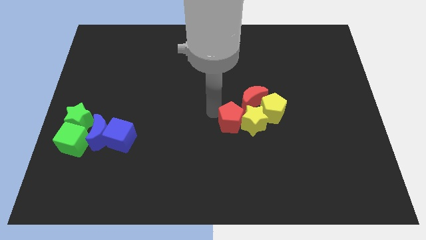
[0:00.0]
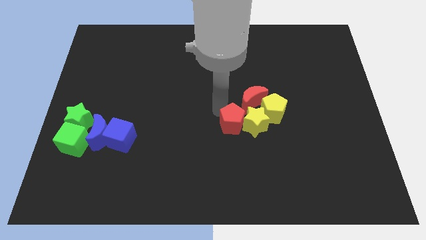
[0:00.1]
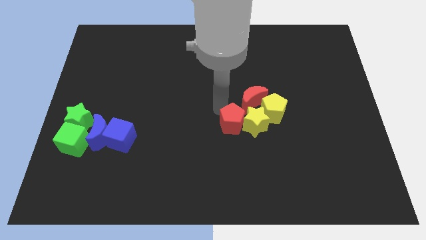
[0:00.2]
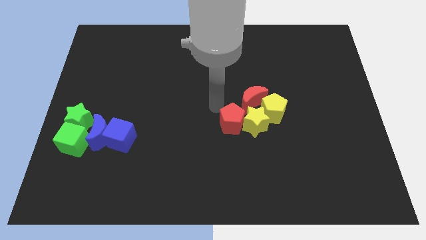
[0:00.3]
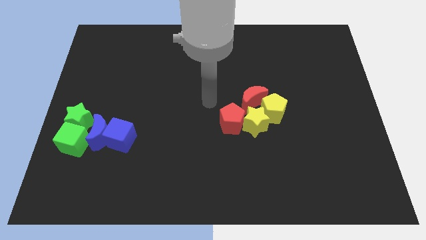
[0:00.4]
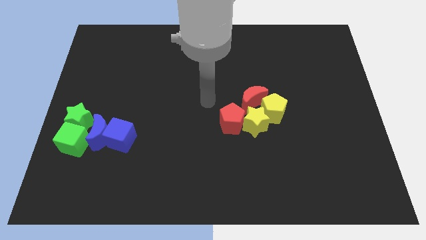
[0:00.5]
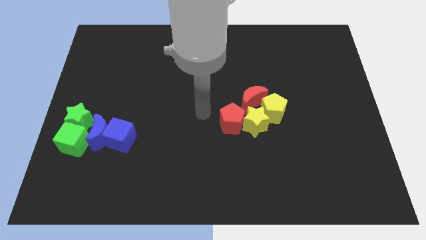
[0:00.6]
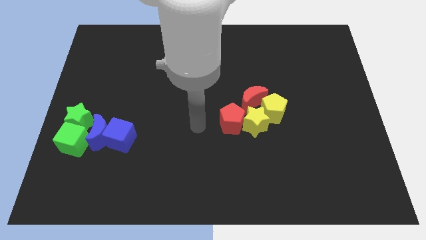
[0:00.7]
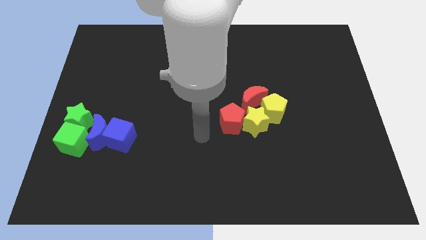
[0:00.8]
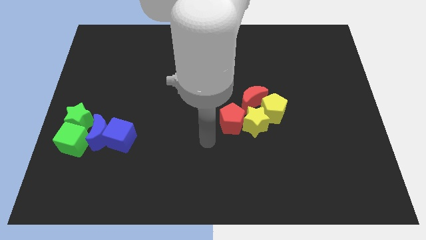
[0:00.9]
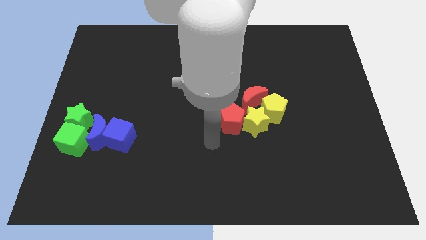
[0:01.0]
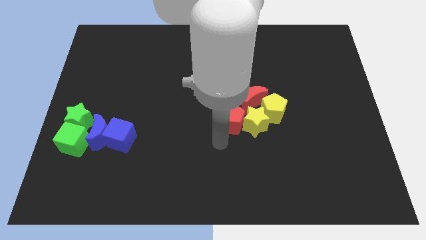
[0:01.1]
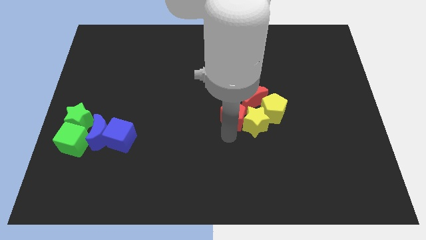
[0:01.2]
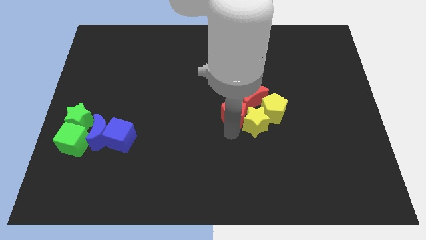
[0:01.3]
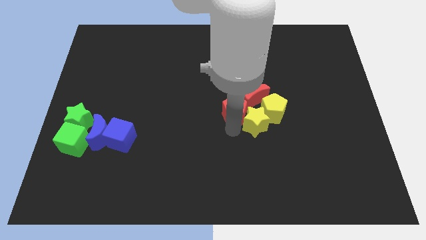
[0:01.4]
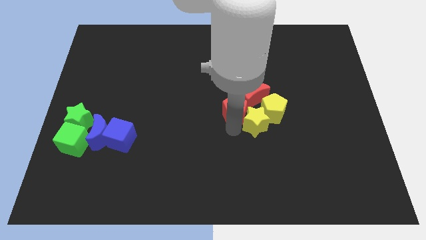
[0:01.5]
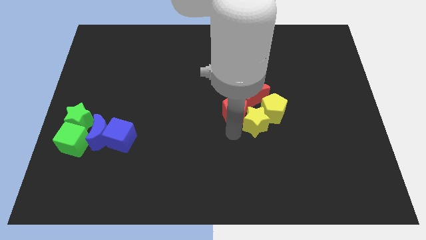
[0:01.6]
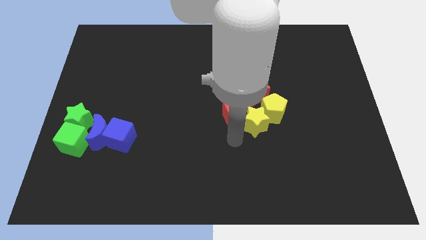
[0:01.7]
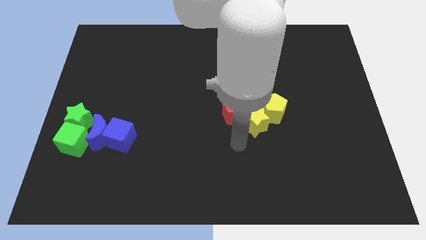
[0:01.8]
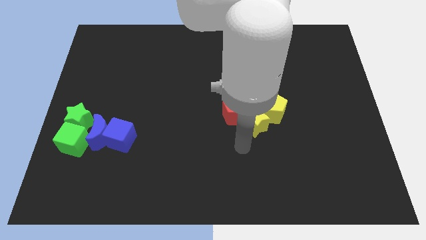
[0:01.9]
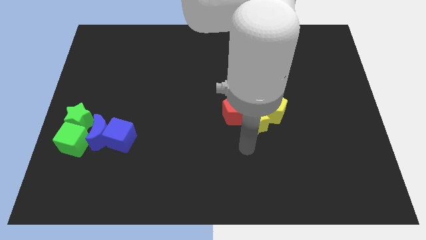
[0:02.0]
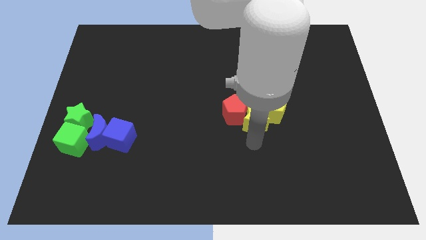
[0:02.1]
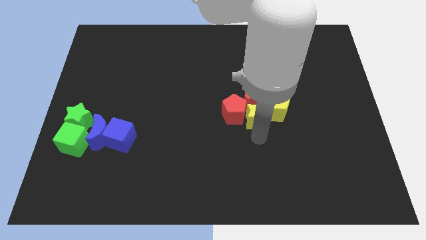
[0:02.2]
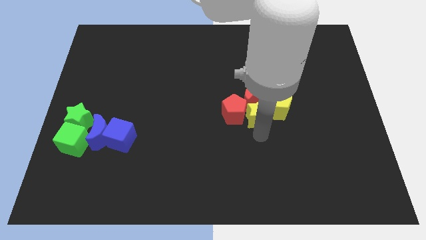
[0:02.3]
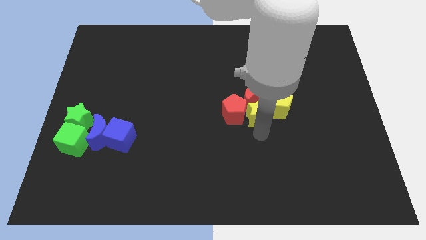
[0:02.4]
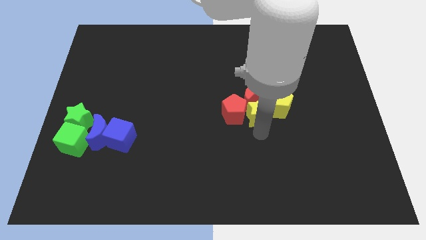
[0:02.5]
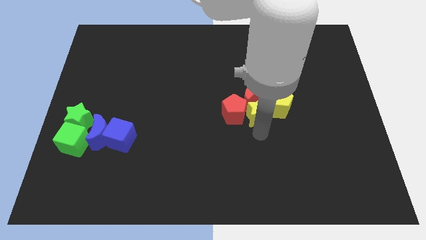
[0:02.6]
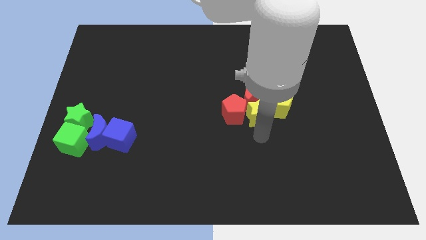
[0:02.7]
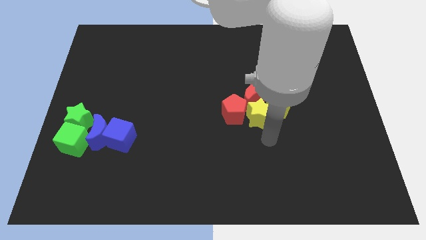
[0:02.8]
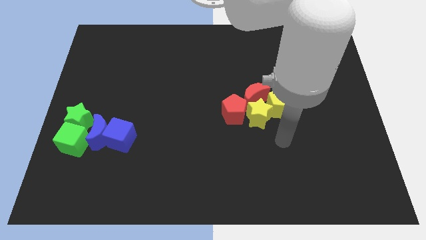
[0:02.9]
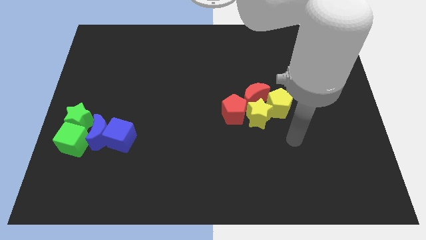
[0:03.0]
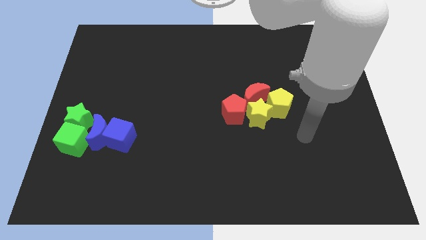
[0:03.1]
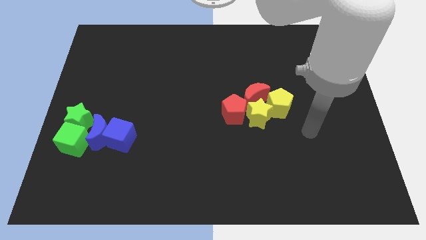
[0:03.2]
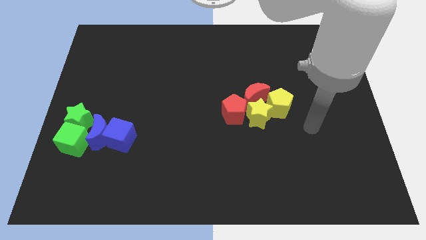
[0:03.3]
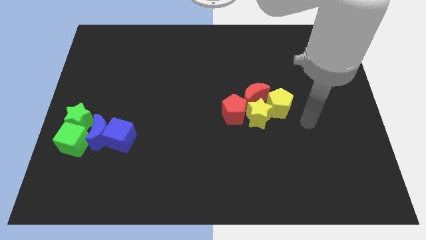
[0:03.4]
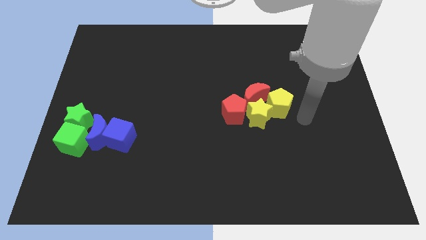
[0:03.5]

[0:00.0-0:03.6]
slightly move the yellow star to the middle of red pentagon and yellow pentagon

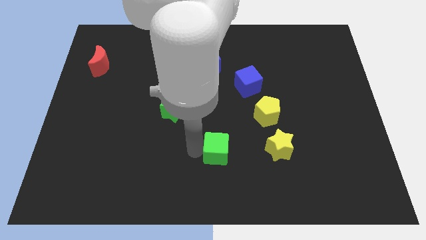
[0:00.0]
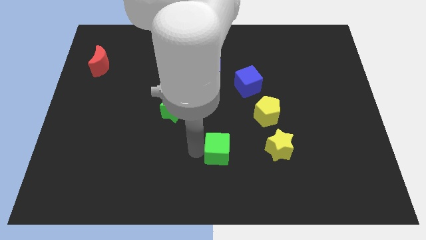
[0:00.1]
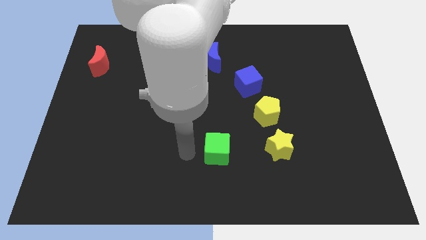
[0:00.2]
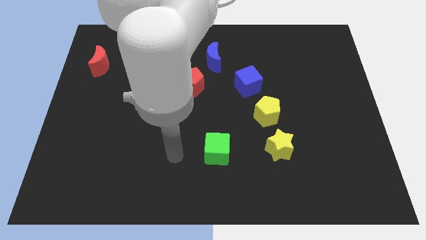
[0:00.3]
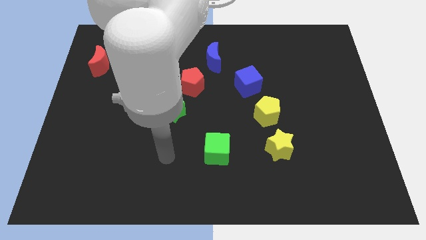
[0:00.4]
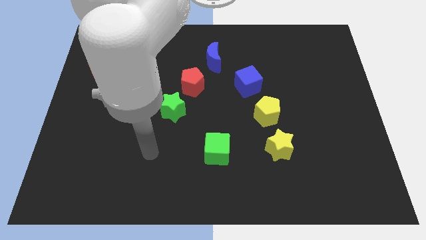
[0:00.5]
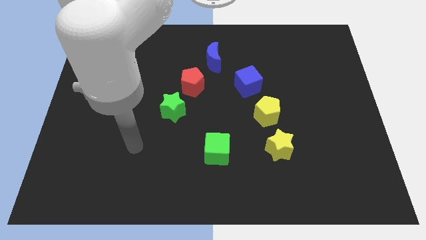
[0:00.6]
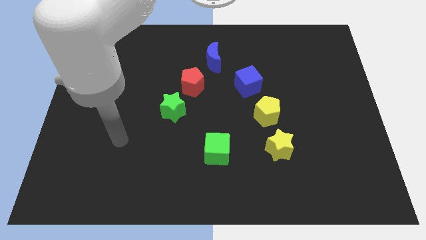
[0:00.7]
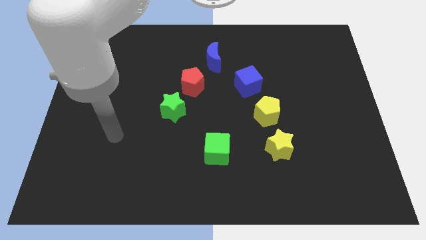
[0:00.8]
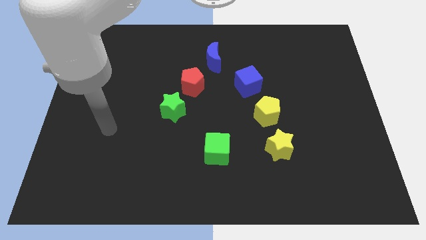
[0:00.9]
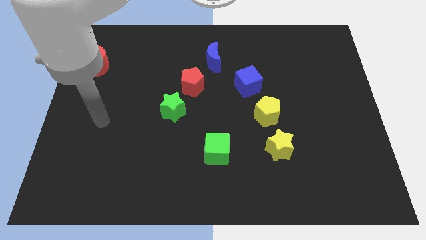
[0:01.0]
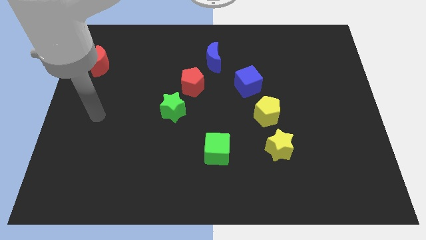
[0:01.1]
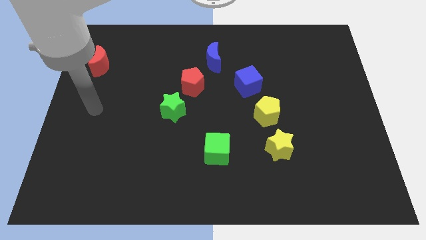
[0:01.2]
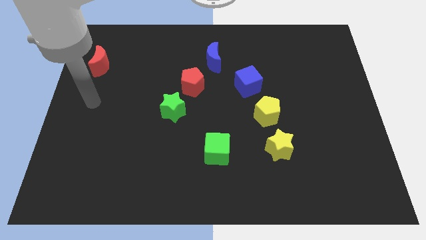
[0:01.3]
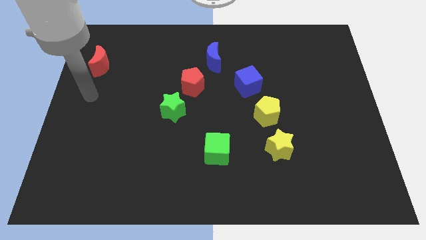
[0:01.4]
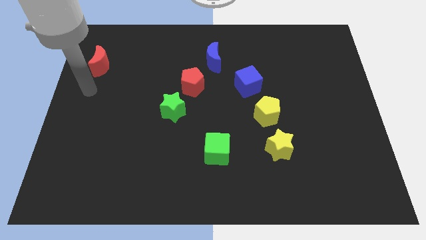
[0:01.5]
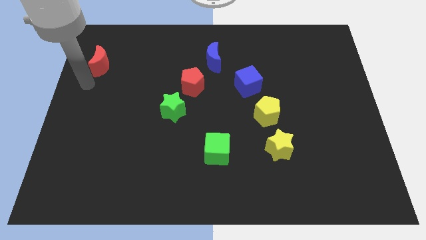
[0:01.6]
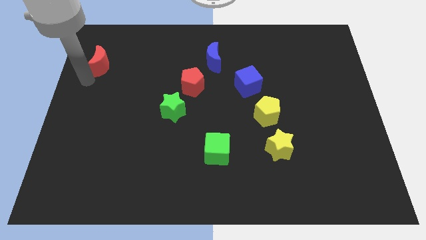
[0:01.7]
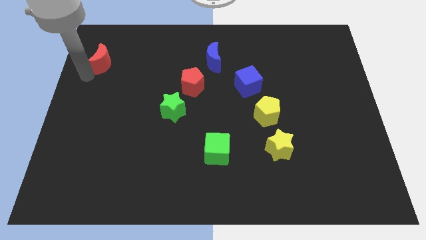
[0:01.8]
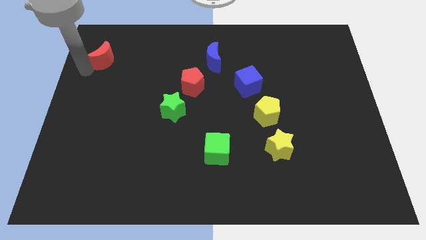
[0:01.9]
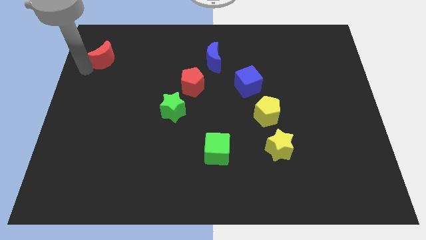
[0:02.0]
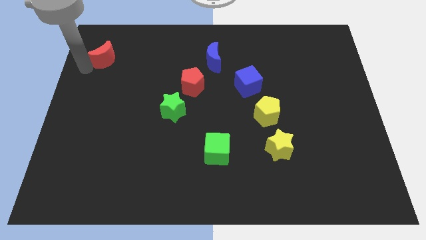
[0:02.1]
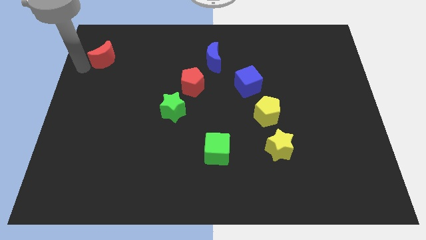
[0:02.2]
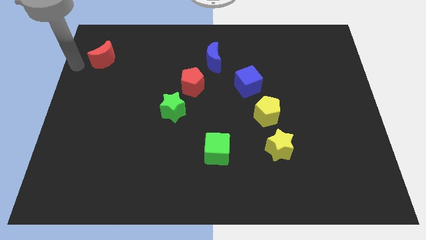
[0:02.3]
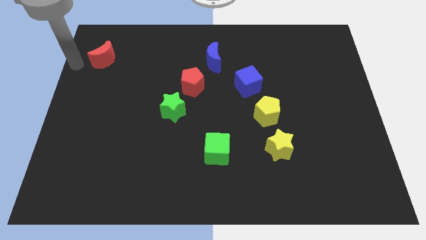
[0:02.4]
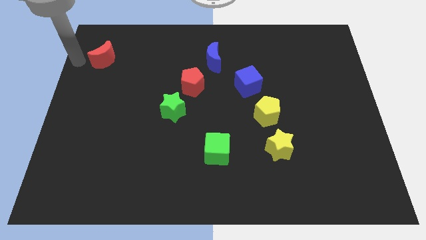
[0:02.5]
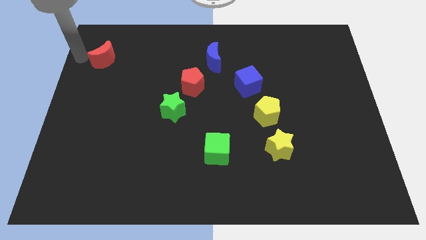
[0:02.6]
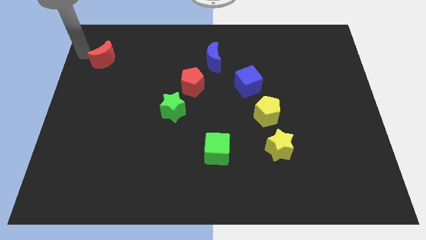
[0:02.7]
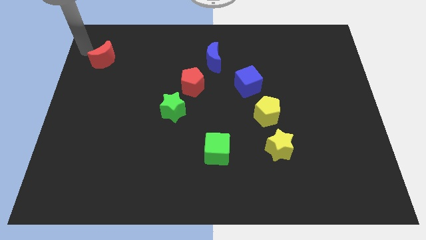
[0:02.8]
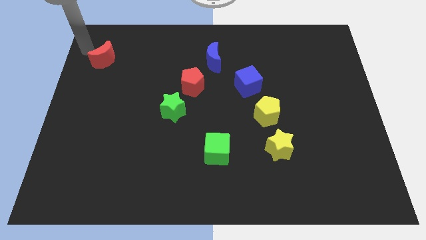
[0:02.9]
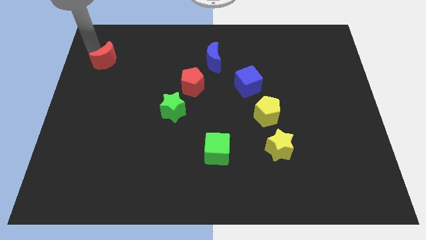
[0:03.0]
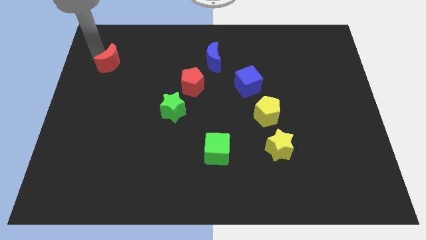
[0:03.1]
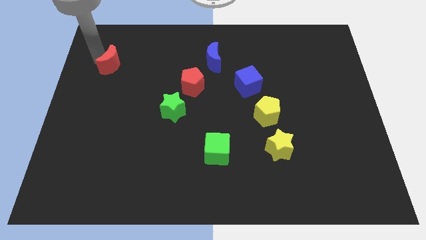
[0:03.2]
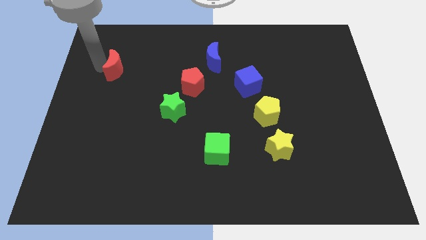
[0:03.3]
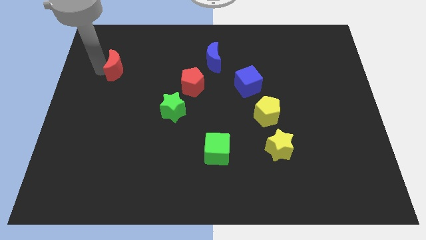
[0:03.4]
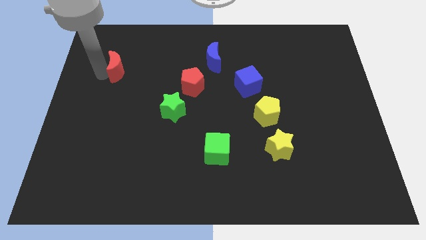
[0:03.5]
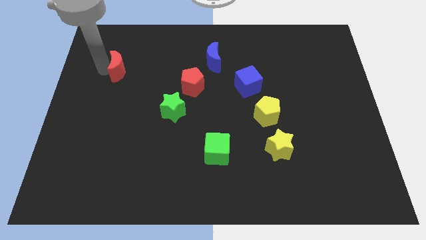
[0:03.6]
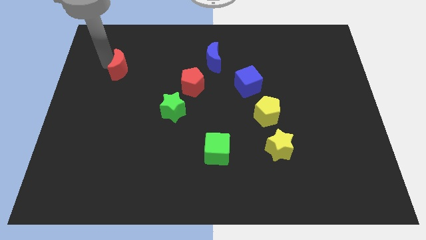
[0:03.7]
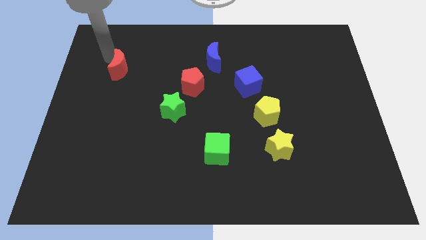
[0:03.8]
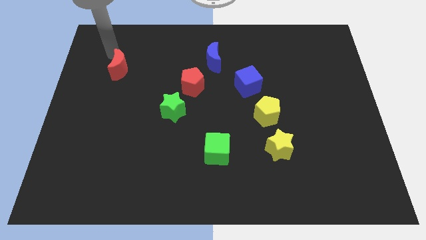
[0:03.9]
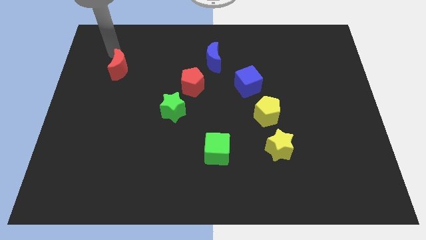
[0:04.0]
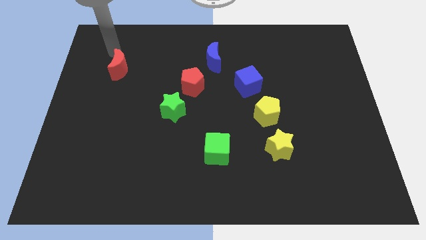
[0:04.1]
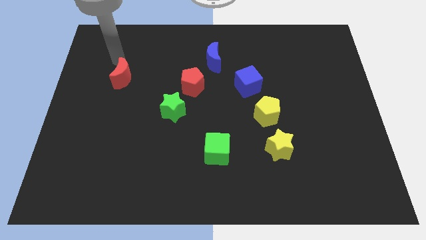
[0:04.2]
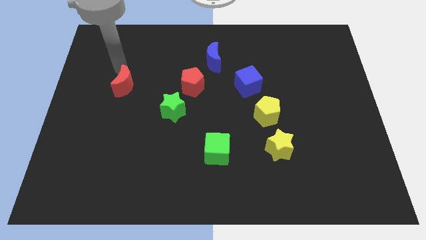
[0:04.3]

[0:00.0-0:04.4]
move your arm away from the green cube

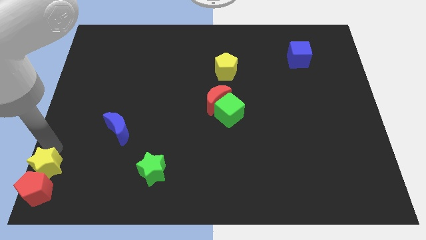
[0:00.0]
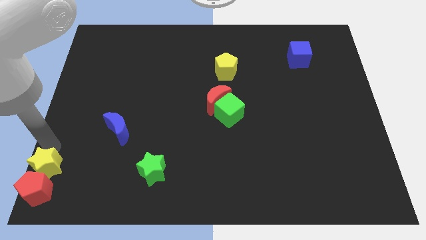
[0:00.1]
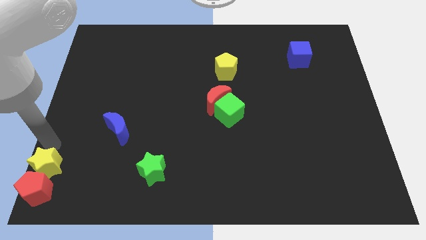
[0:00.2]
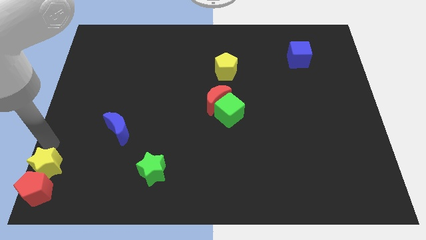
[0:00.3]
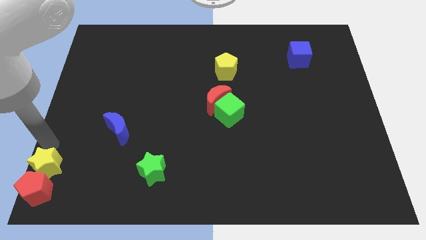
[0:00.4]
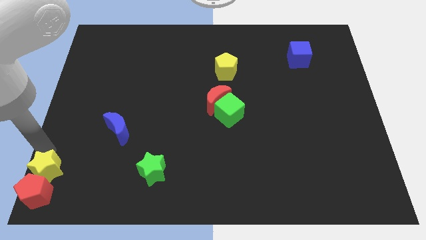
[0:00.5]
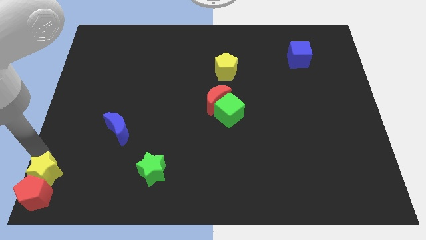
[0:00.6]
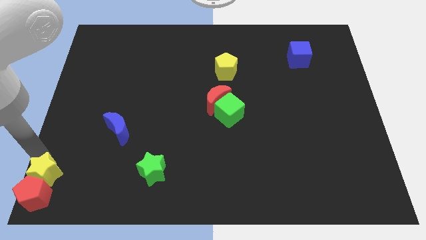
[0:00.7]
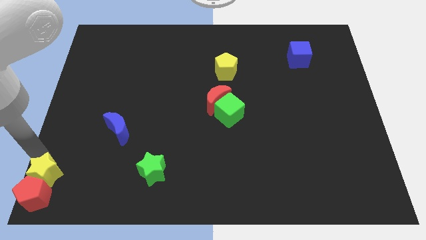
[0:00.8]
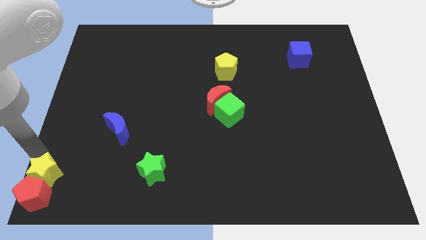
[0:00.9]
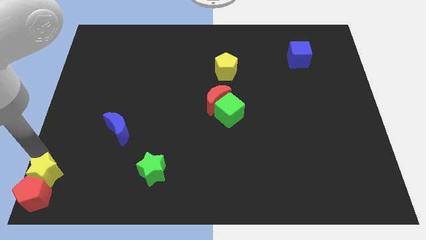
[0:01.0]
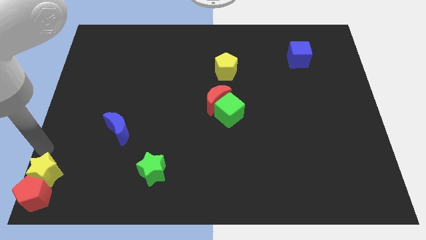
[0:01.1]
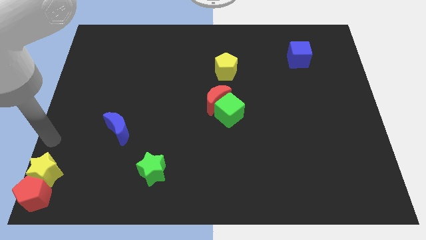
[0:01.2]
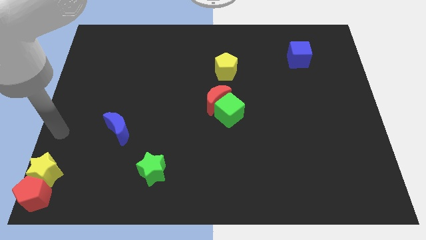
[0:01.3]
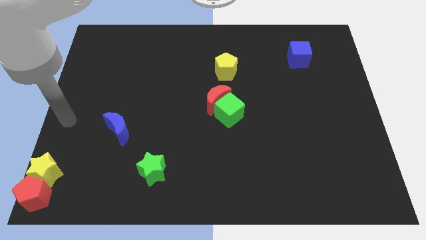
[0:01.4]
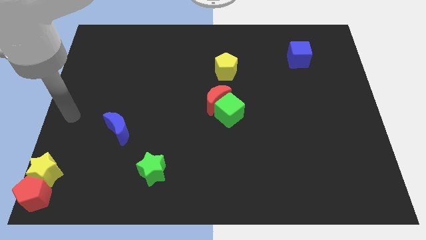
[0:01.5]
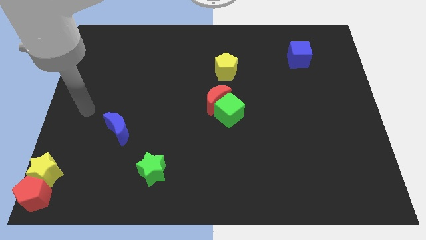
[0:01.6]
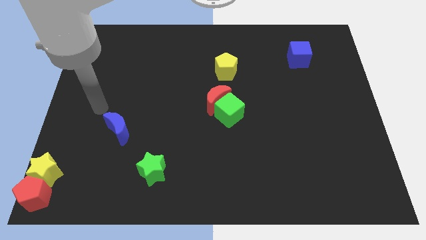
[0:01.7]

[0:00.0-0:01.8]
move yellow star along with red pentagon at the bottom left corner of the board
